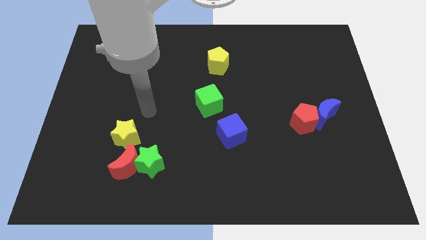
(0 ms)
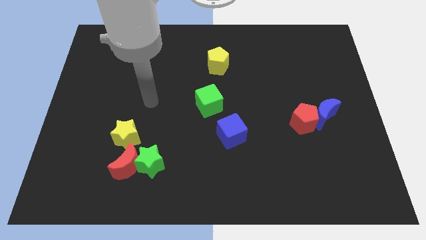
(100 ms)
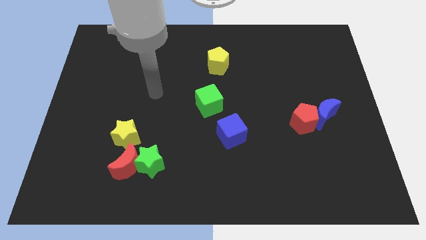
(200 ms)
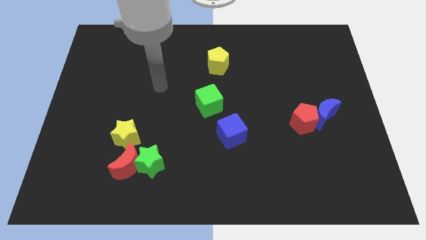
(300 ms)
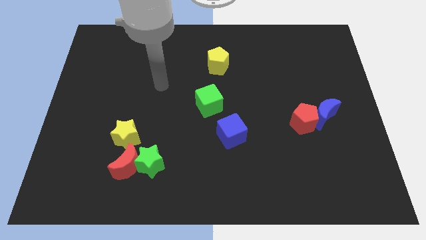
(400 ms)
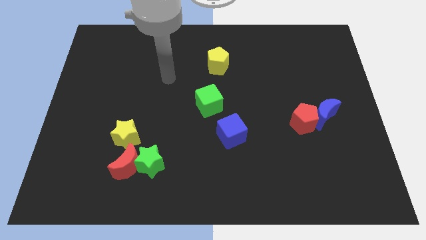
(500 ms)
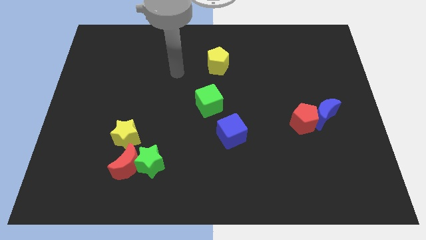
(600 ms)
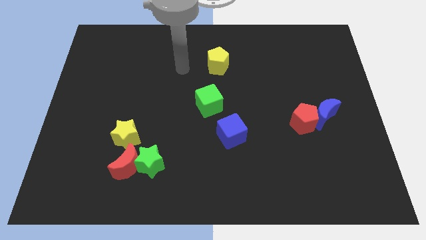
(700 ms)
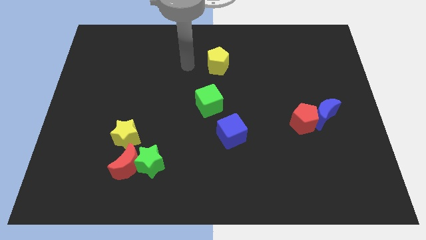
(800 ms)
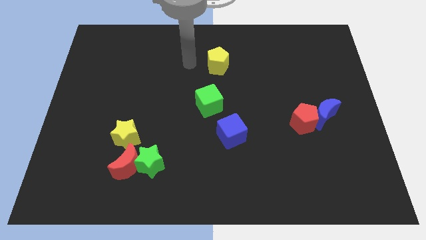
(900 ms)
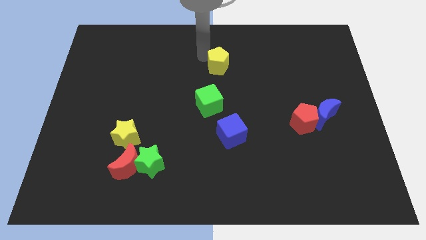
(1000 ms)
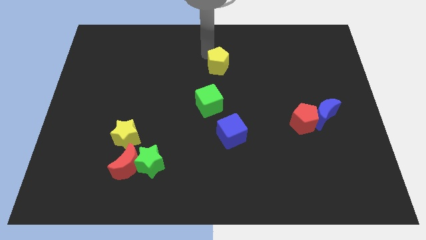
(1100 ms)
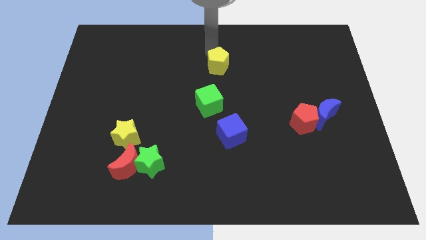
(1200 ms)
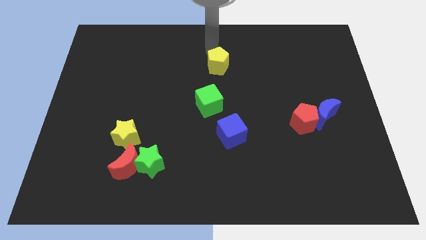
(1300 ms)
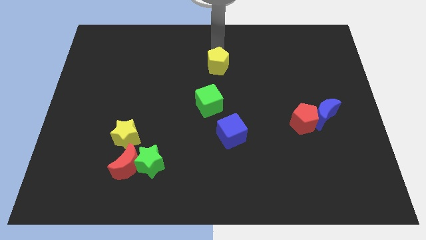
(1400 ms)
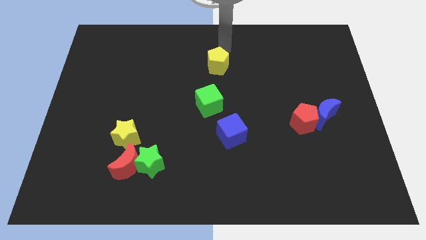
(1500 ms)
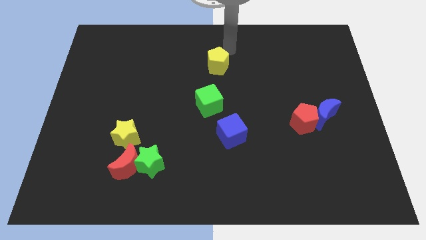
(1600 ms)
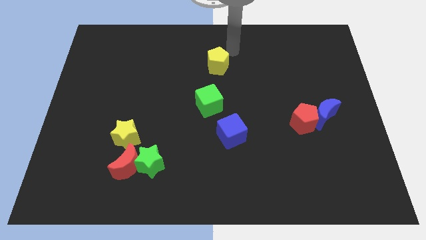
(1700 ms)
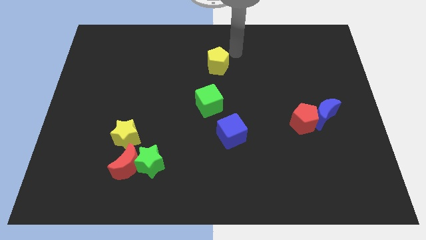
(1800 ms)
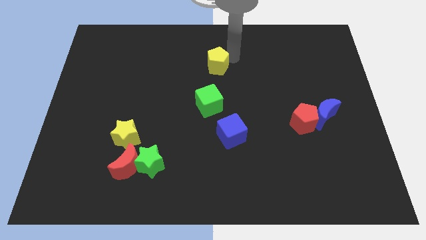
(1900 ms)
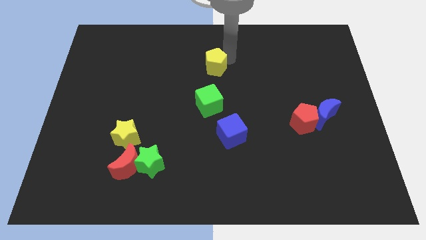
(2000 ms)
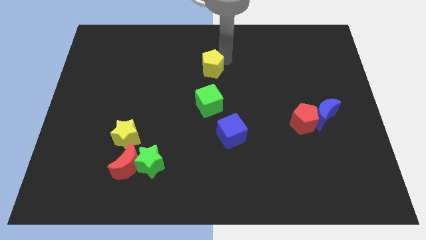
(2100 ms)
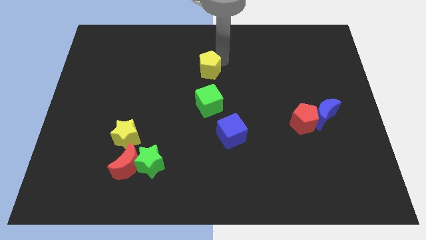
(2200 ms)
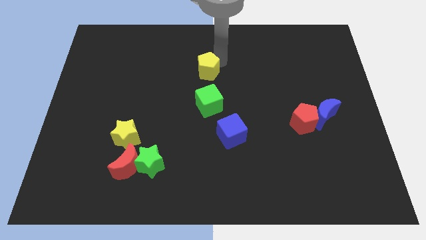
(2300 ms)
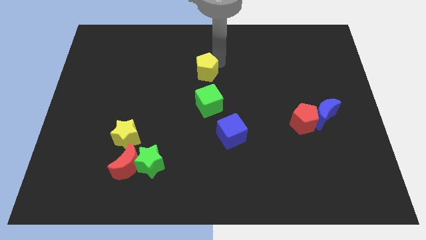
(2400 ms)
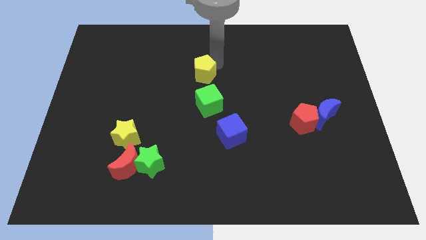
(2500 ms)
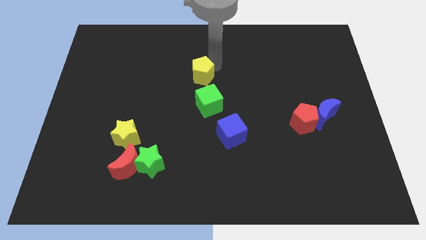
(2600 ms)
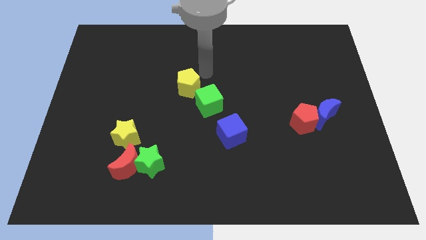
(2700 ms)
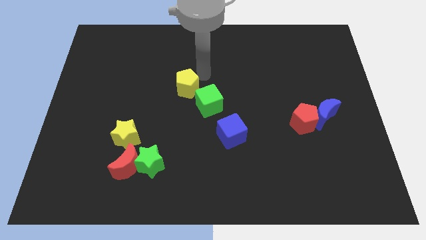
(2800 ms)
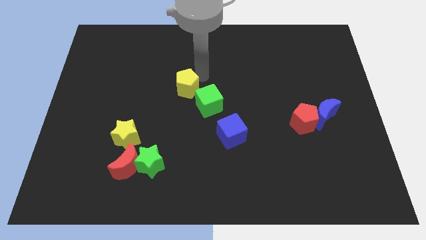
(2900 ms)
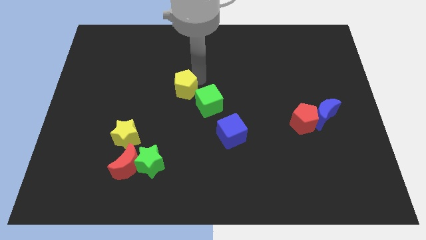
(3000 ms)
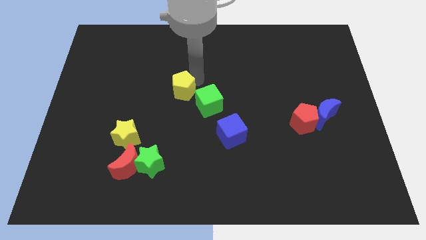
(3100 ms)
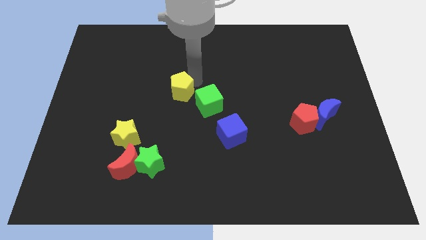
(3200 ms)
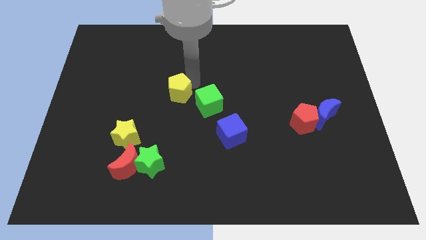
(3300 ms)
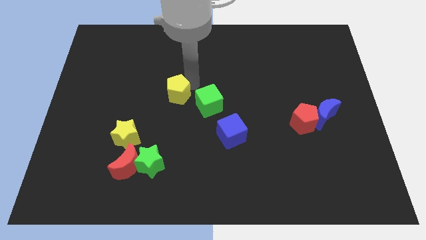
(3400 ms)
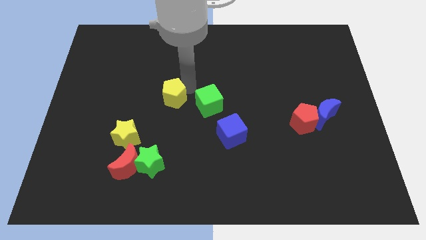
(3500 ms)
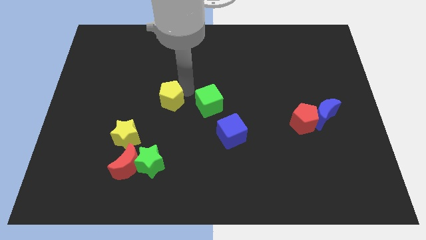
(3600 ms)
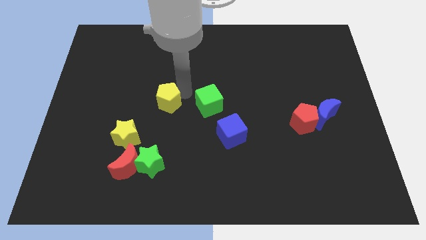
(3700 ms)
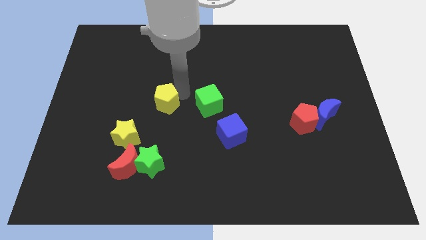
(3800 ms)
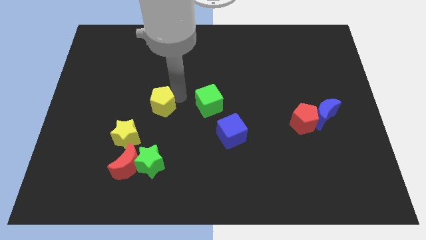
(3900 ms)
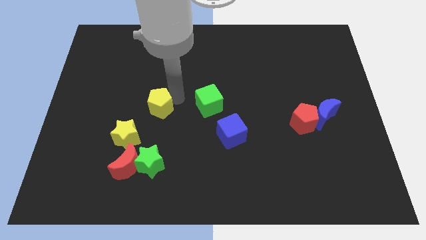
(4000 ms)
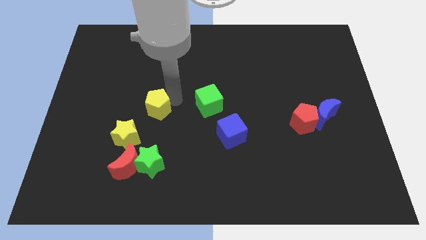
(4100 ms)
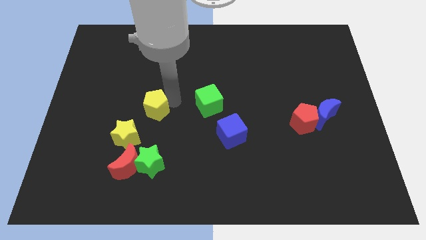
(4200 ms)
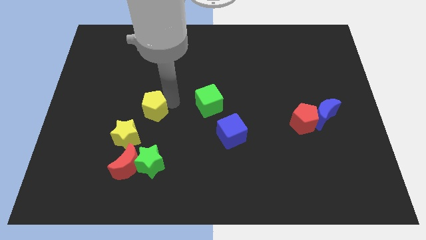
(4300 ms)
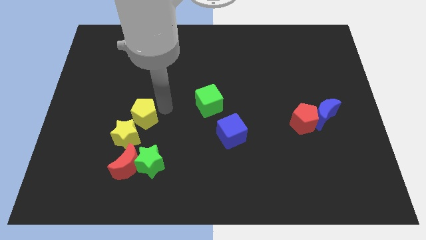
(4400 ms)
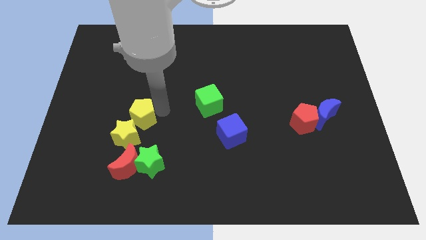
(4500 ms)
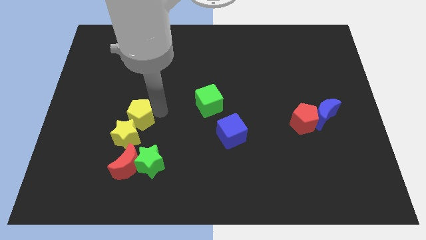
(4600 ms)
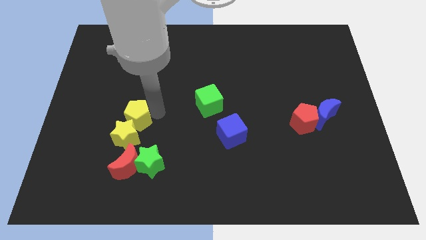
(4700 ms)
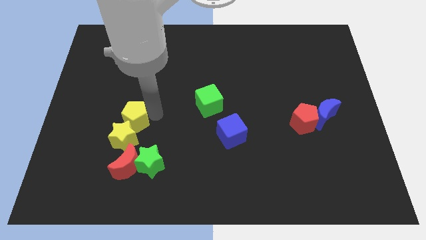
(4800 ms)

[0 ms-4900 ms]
move the yellow pentagon close to the yellow star

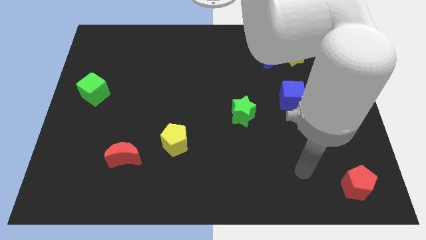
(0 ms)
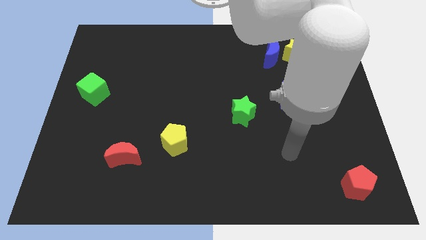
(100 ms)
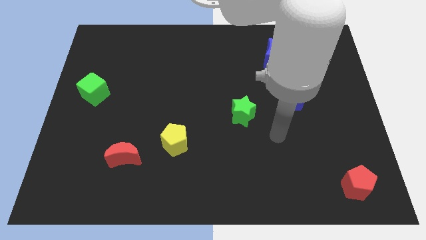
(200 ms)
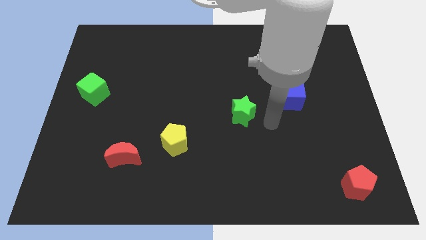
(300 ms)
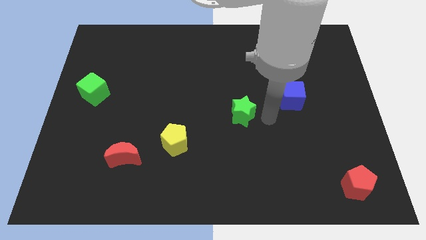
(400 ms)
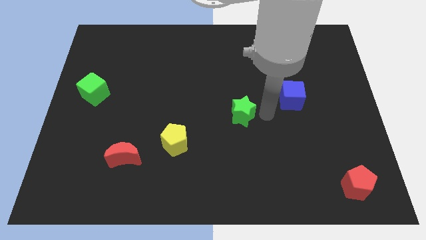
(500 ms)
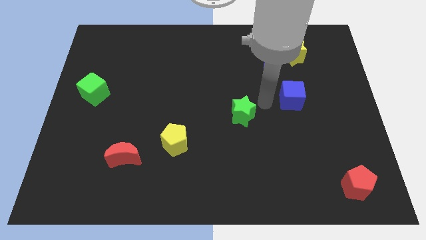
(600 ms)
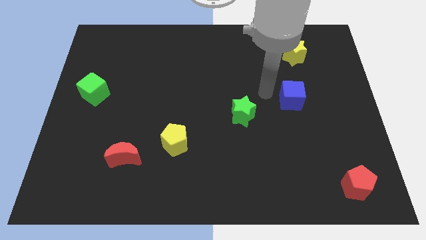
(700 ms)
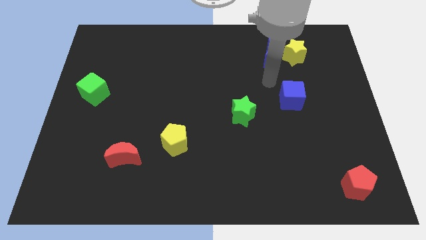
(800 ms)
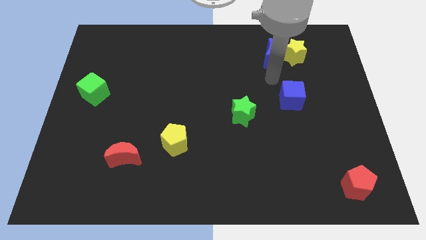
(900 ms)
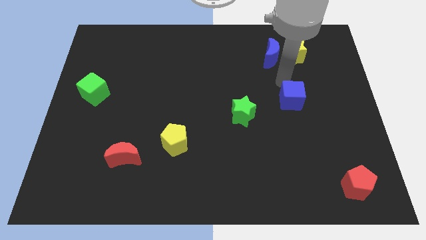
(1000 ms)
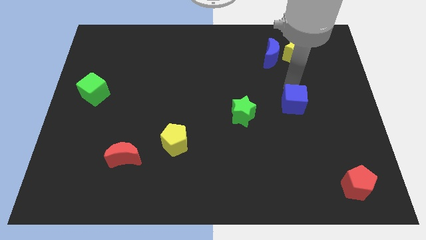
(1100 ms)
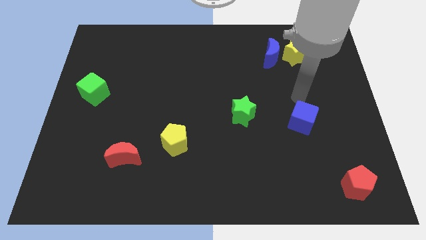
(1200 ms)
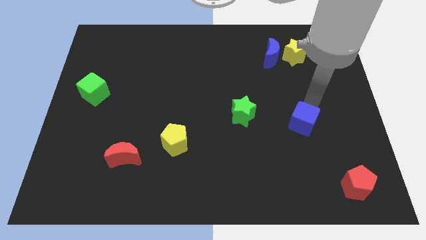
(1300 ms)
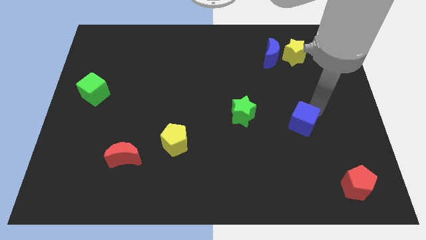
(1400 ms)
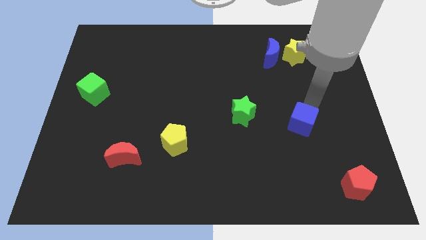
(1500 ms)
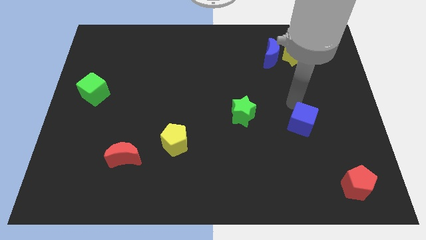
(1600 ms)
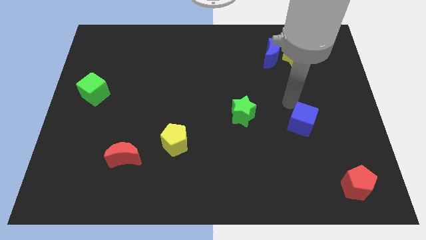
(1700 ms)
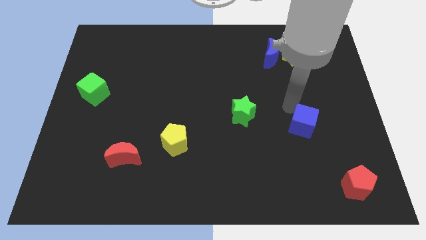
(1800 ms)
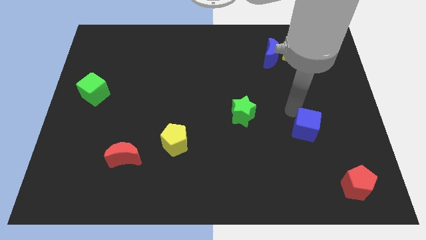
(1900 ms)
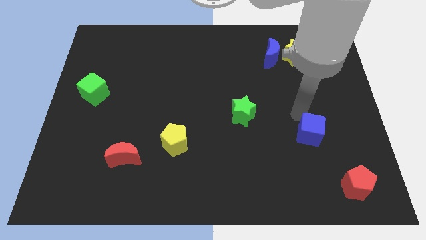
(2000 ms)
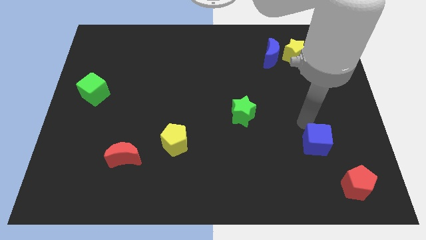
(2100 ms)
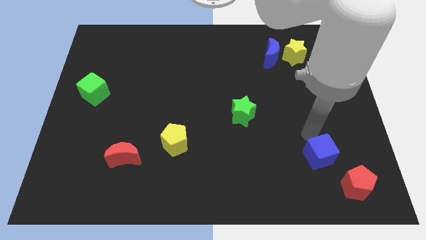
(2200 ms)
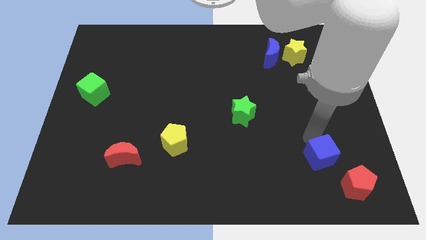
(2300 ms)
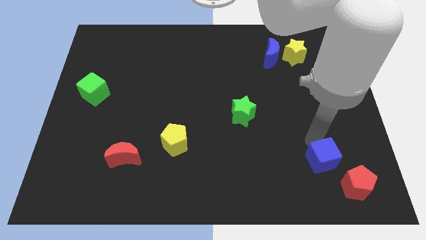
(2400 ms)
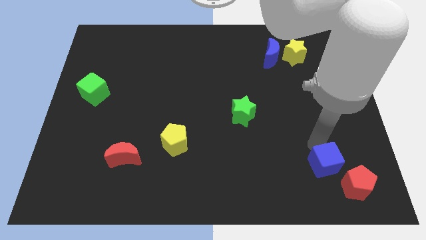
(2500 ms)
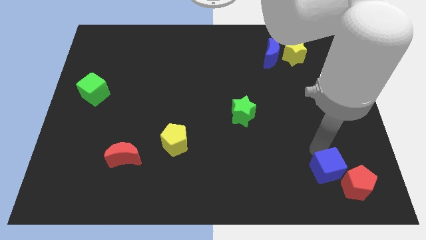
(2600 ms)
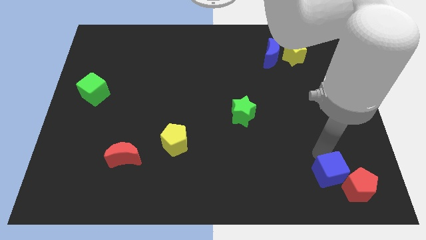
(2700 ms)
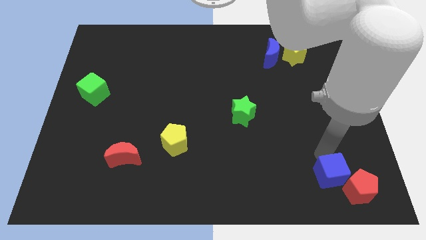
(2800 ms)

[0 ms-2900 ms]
move the blue cube next to the red pentagon

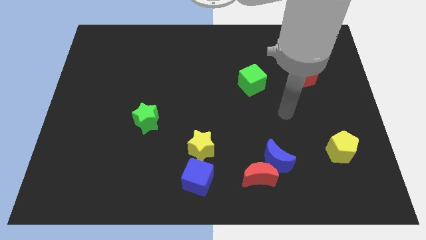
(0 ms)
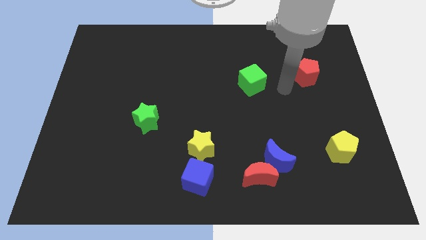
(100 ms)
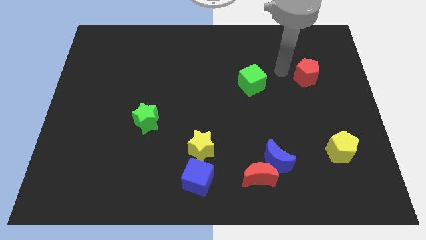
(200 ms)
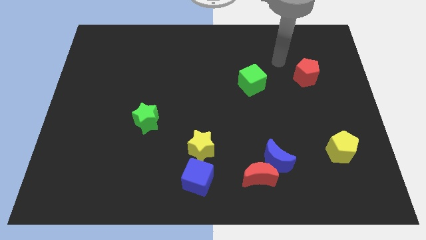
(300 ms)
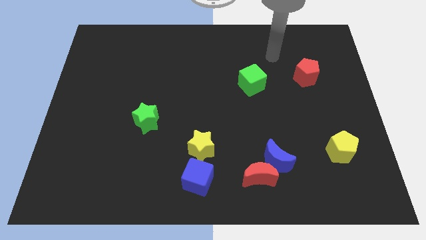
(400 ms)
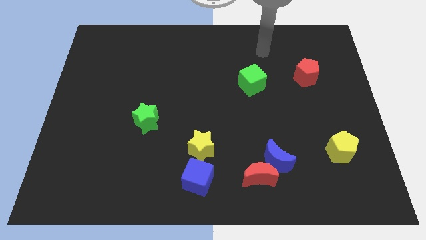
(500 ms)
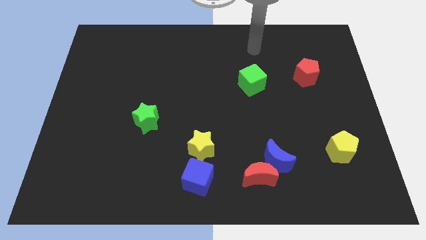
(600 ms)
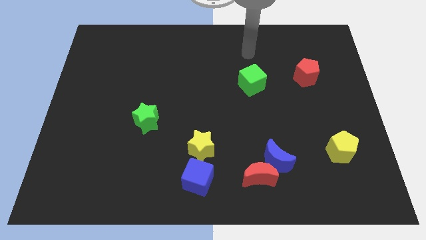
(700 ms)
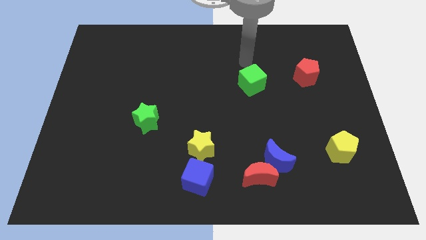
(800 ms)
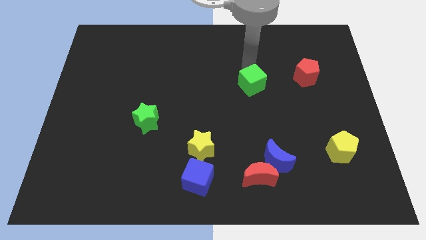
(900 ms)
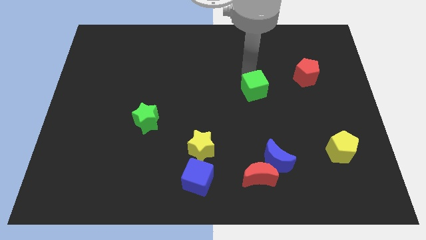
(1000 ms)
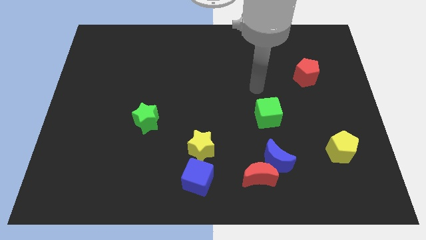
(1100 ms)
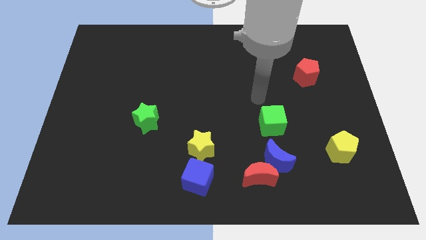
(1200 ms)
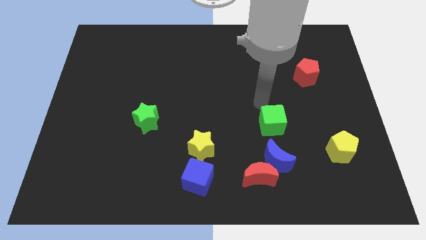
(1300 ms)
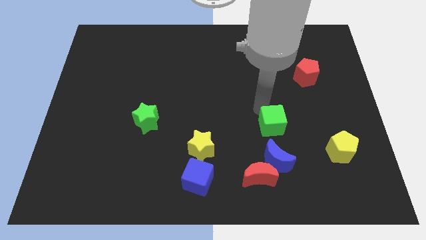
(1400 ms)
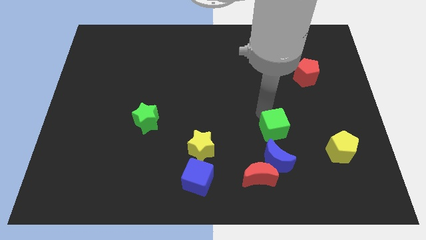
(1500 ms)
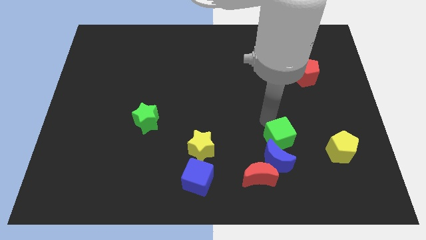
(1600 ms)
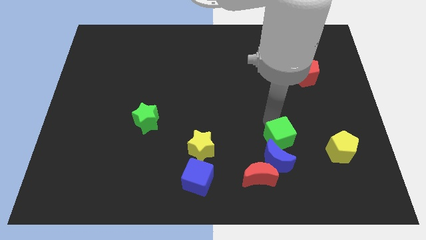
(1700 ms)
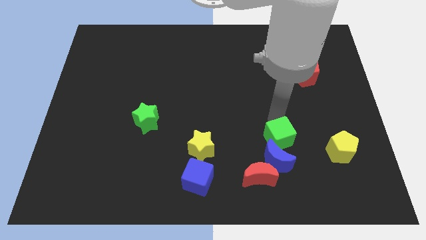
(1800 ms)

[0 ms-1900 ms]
move the green cube next to the blue moon
